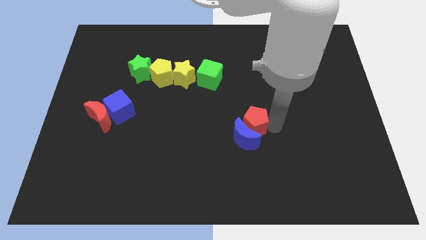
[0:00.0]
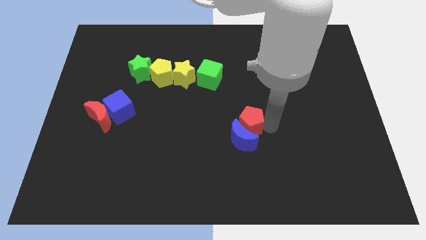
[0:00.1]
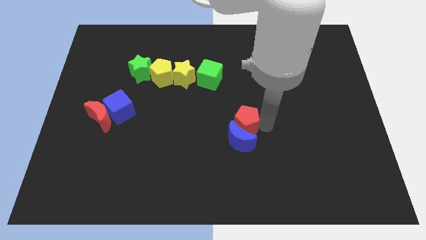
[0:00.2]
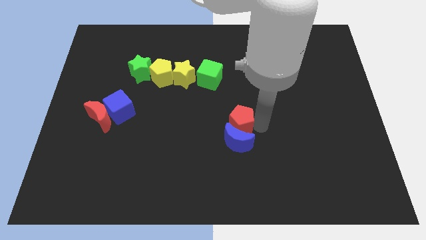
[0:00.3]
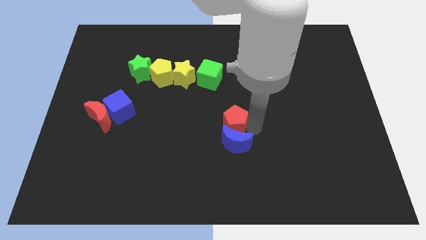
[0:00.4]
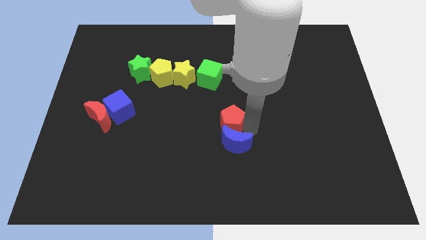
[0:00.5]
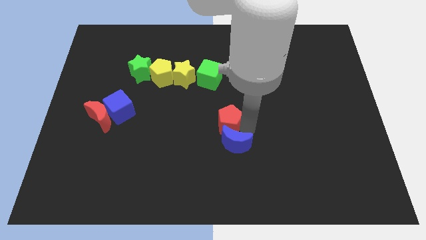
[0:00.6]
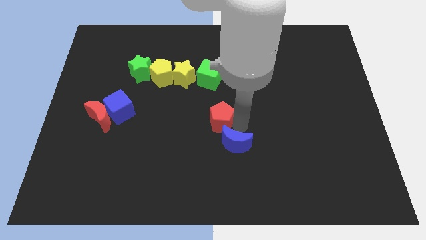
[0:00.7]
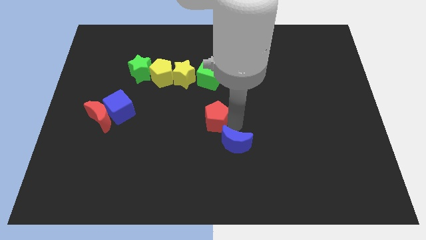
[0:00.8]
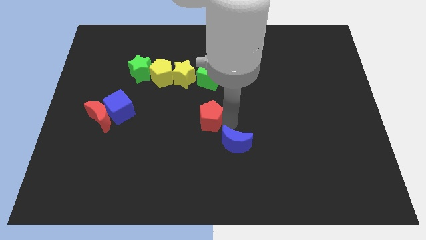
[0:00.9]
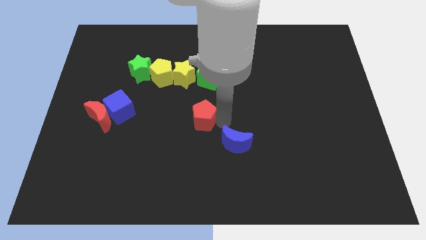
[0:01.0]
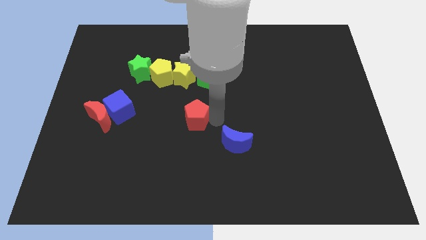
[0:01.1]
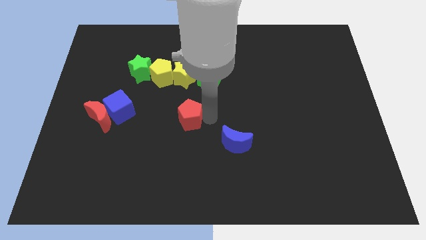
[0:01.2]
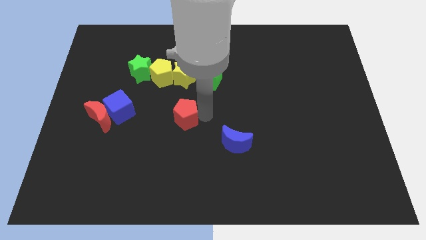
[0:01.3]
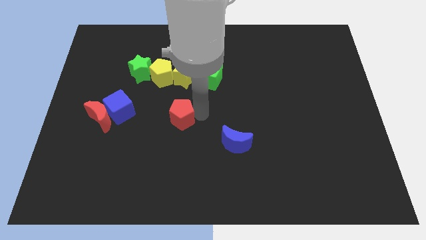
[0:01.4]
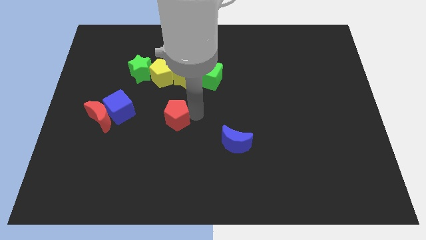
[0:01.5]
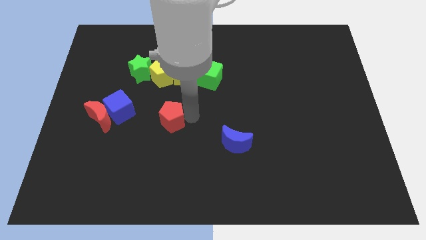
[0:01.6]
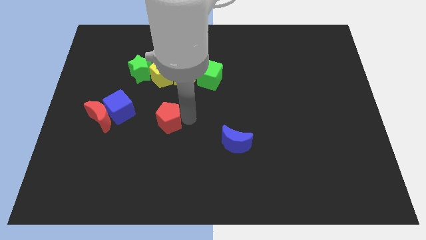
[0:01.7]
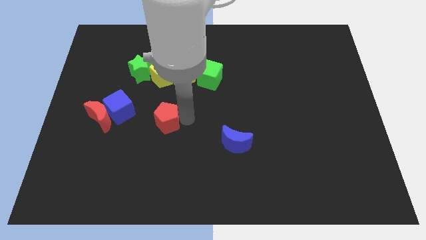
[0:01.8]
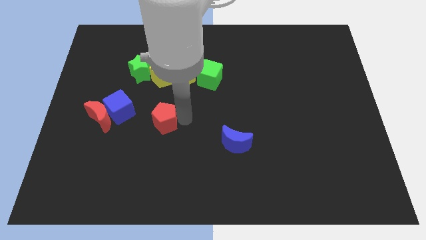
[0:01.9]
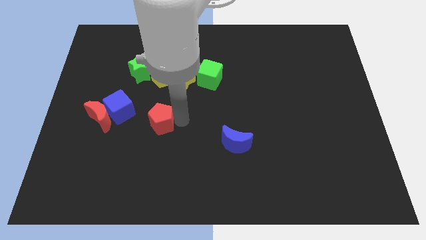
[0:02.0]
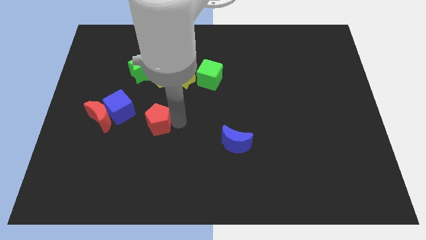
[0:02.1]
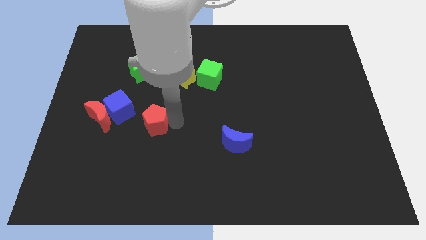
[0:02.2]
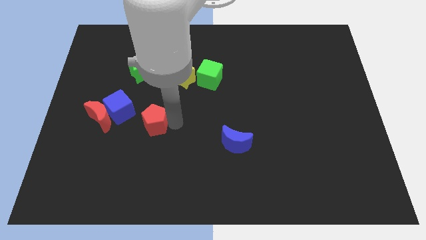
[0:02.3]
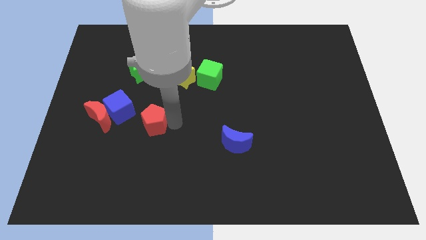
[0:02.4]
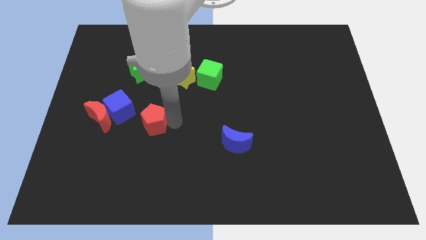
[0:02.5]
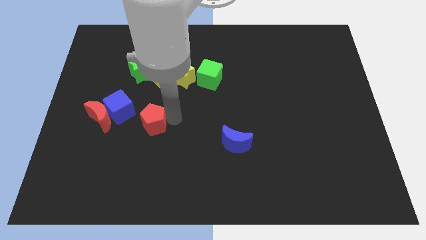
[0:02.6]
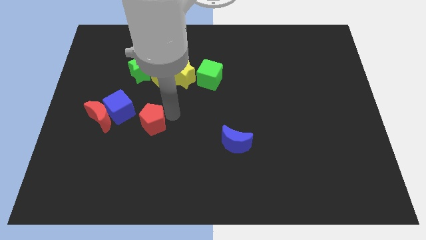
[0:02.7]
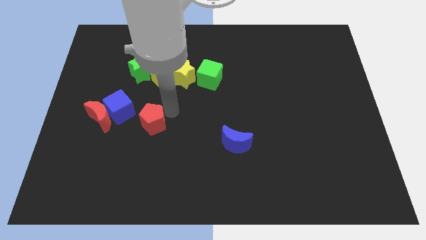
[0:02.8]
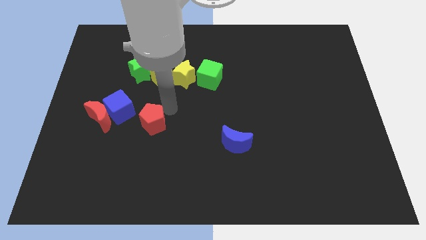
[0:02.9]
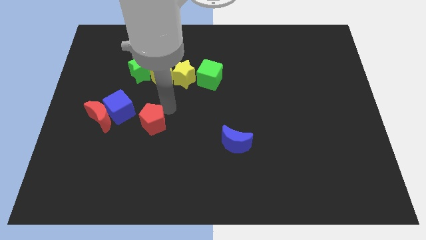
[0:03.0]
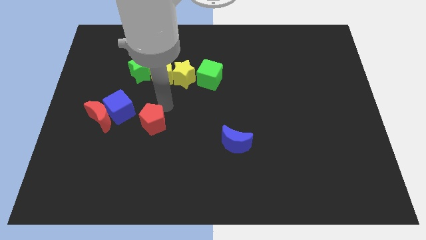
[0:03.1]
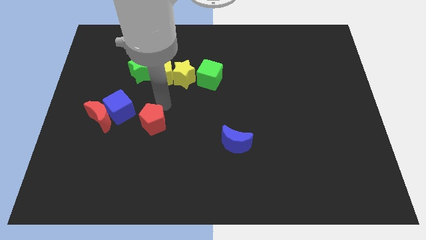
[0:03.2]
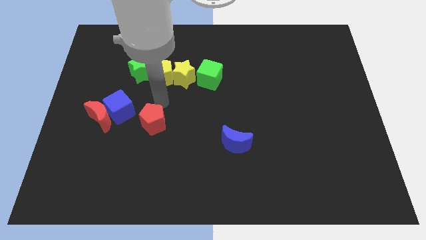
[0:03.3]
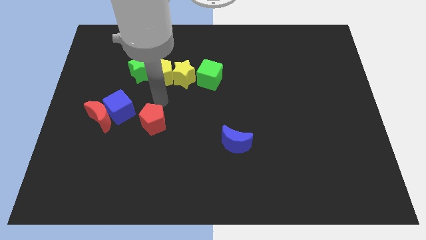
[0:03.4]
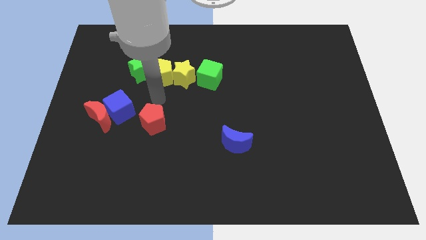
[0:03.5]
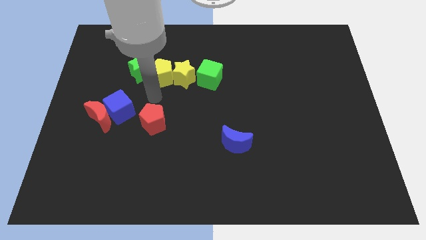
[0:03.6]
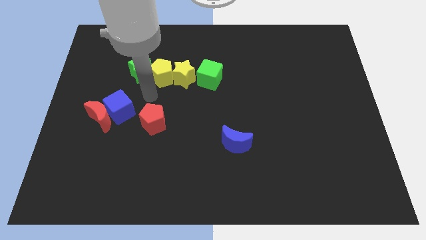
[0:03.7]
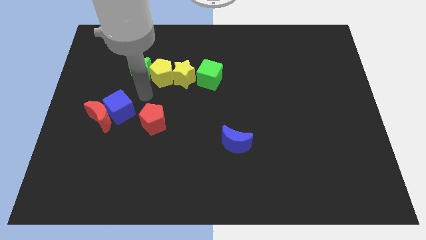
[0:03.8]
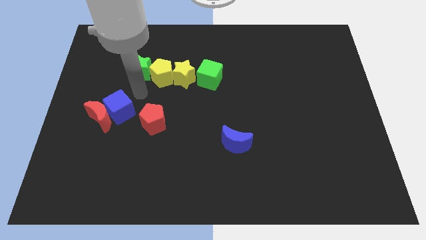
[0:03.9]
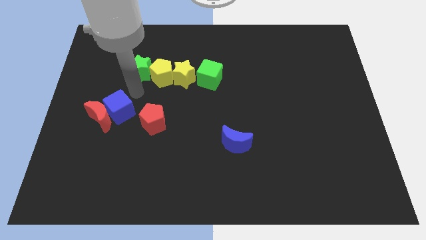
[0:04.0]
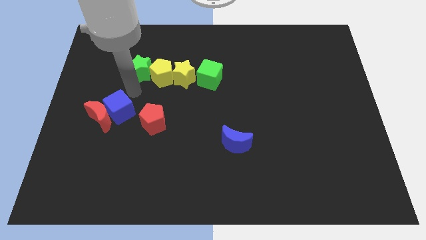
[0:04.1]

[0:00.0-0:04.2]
drag the red pentagon to the right side of the blue cube

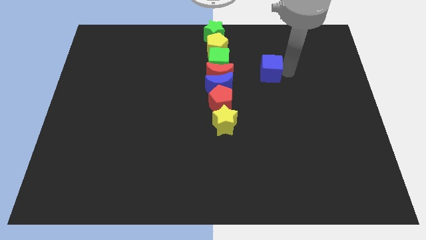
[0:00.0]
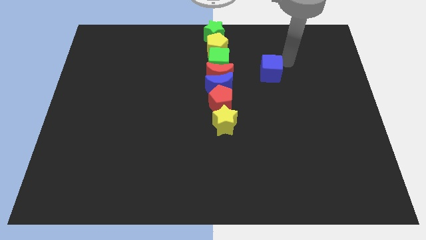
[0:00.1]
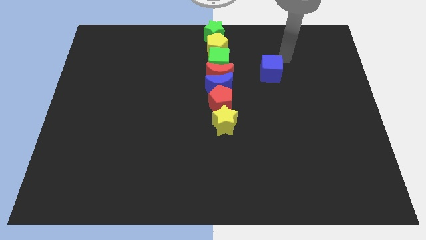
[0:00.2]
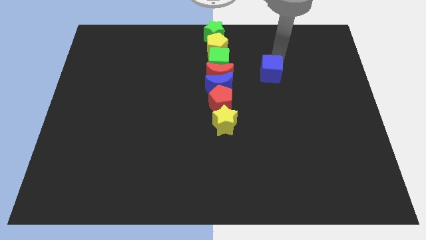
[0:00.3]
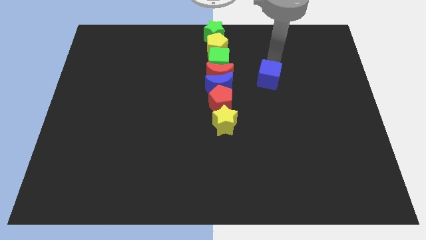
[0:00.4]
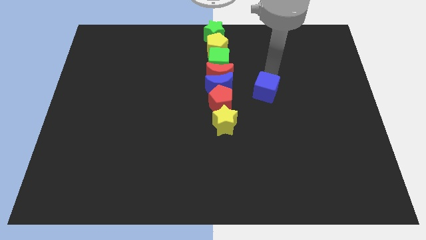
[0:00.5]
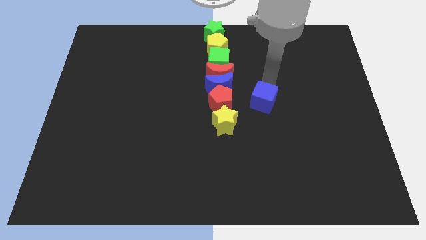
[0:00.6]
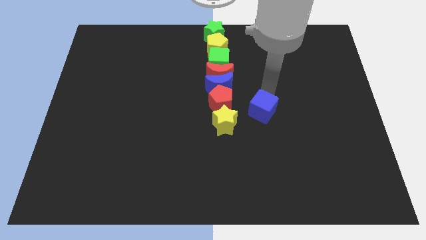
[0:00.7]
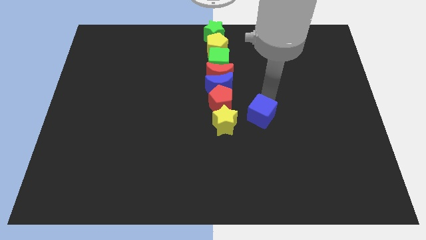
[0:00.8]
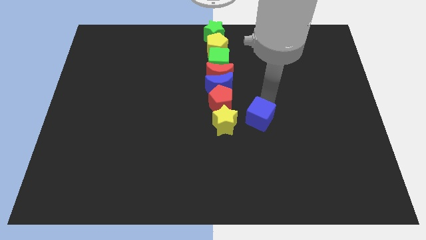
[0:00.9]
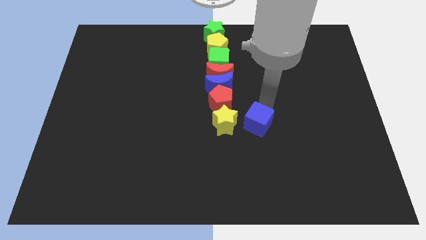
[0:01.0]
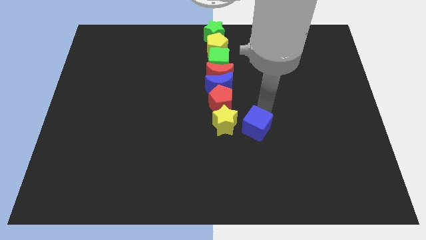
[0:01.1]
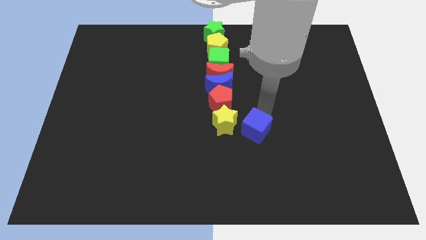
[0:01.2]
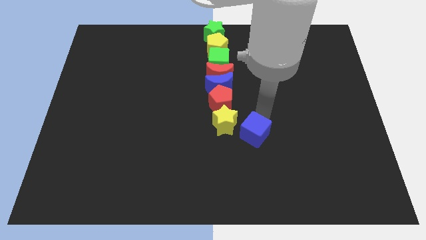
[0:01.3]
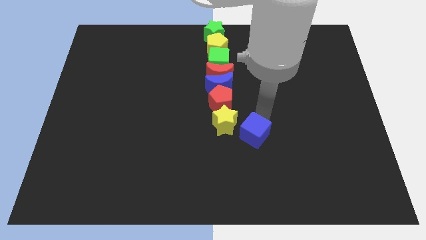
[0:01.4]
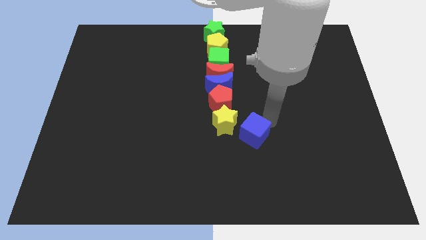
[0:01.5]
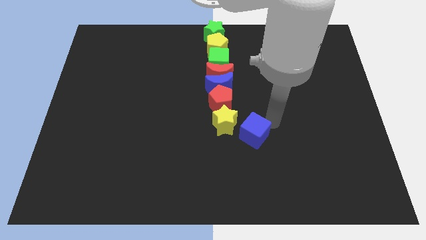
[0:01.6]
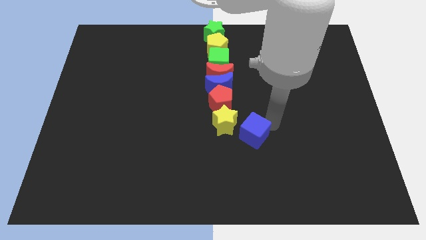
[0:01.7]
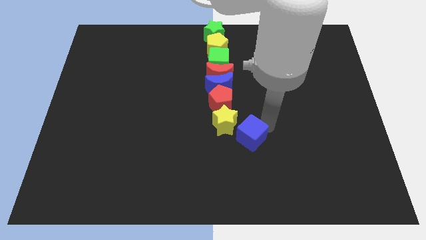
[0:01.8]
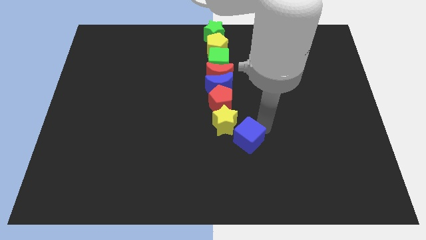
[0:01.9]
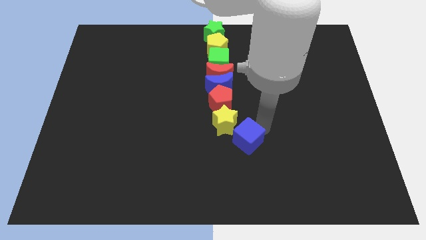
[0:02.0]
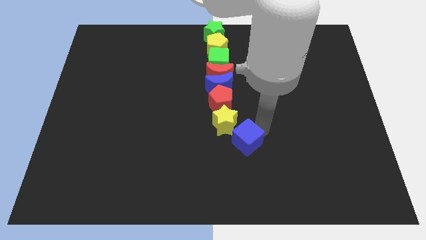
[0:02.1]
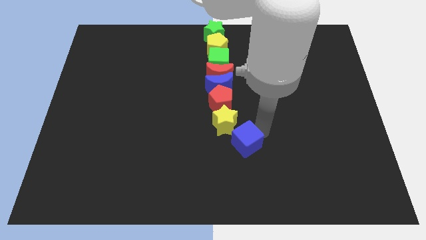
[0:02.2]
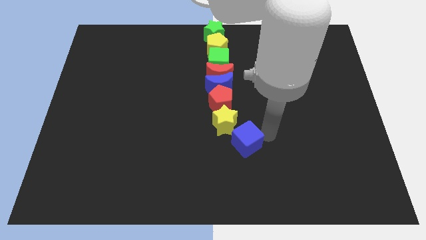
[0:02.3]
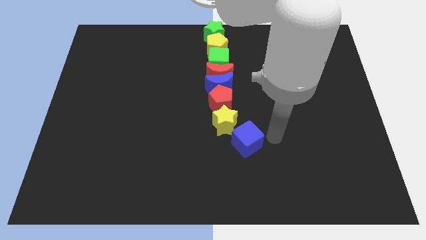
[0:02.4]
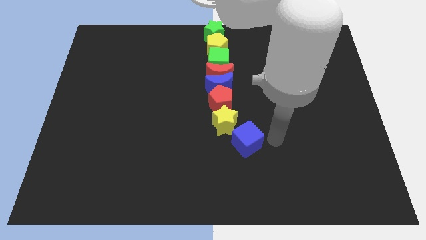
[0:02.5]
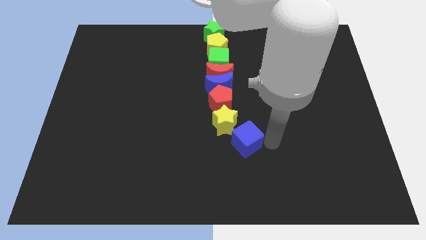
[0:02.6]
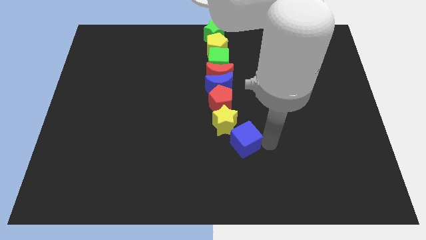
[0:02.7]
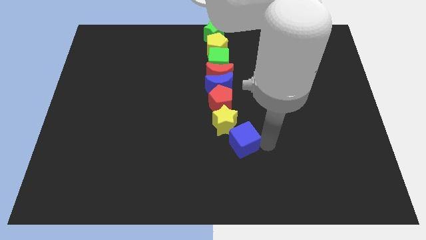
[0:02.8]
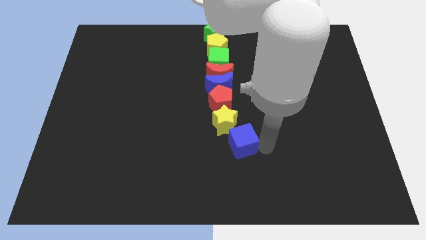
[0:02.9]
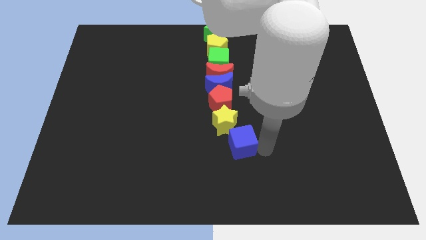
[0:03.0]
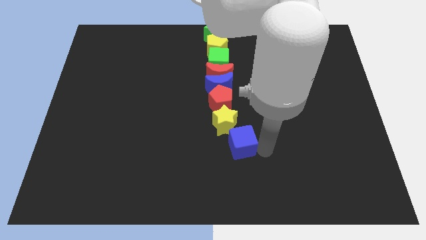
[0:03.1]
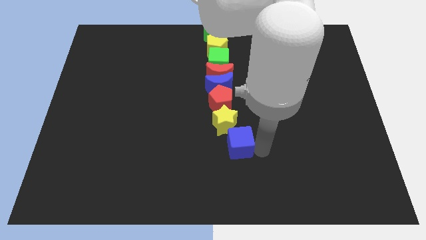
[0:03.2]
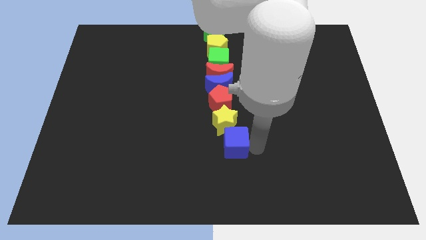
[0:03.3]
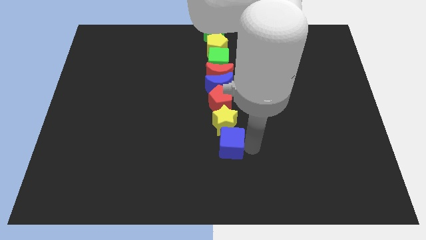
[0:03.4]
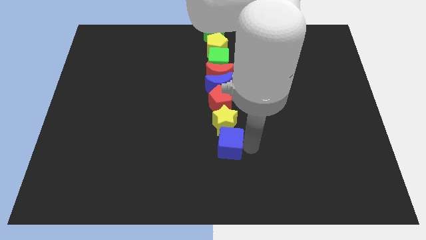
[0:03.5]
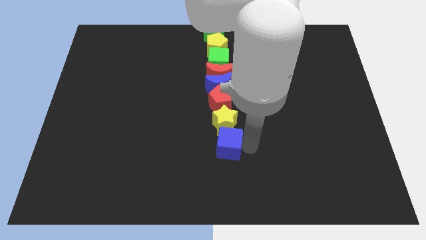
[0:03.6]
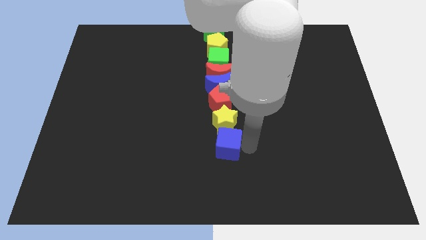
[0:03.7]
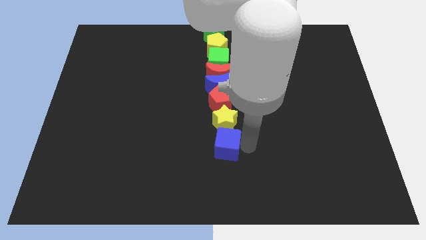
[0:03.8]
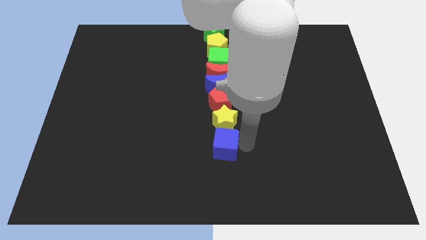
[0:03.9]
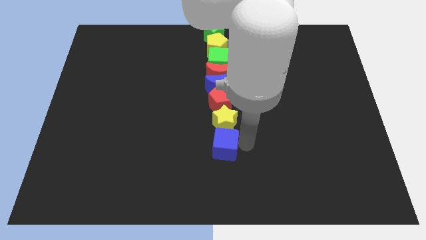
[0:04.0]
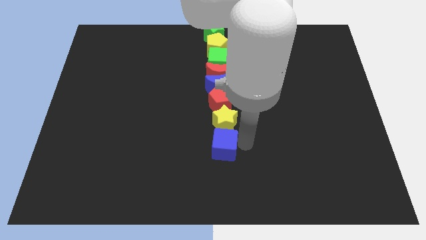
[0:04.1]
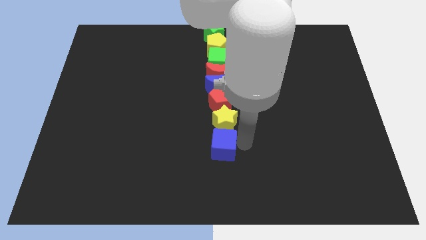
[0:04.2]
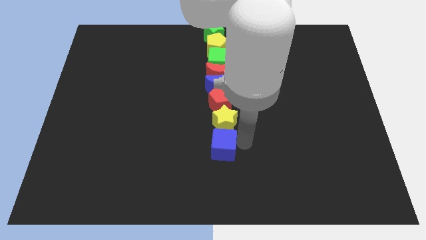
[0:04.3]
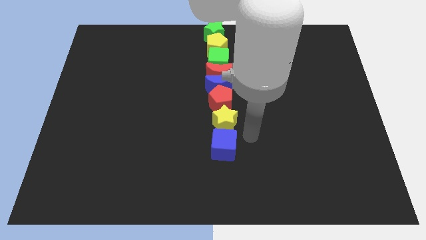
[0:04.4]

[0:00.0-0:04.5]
push the blue cube down to the yellow star

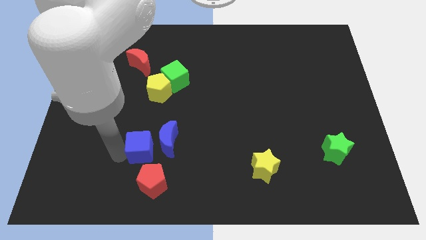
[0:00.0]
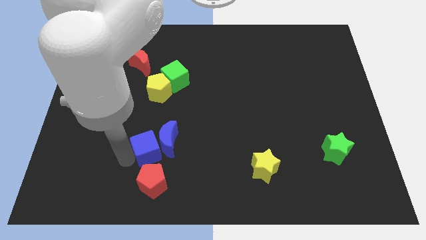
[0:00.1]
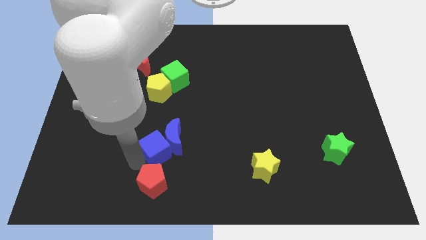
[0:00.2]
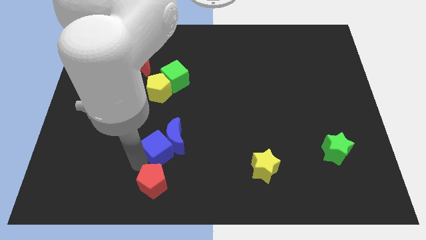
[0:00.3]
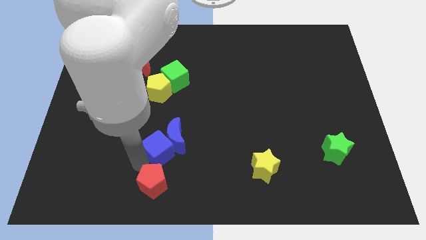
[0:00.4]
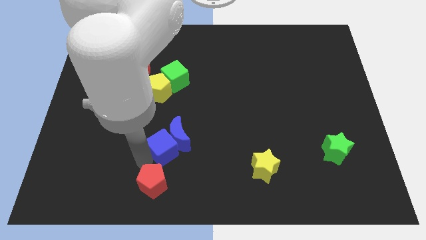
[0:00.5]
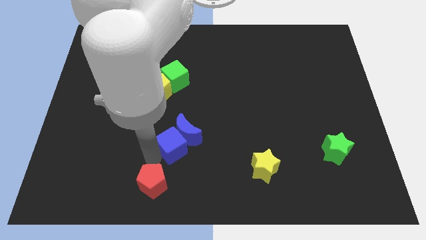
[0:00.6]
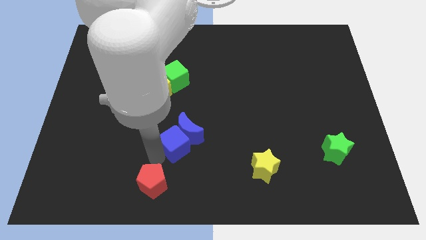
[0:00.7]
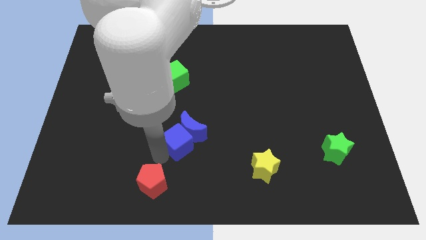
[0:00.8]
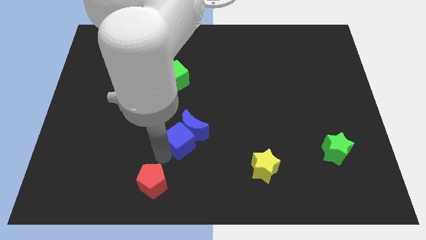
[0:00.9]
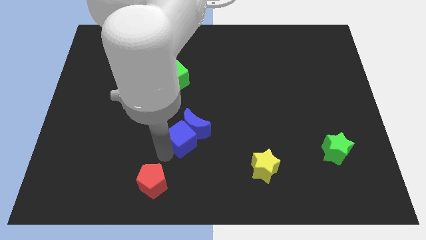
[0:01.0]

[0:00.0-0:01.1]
push the blue cube into the blue moon
